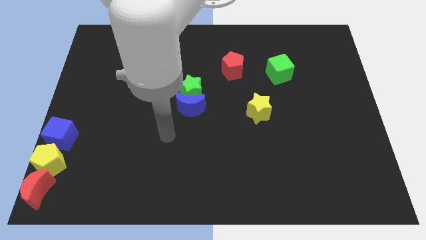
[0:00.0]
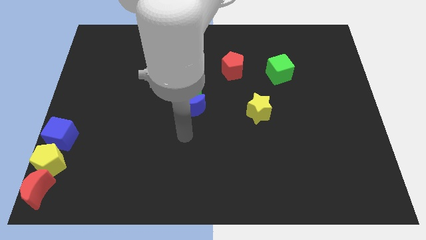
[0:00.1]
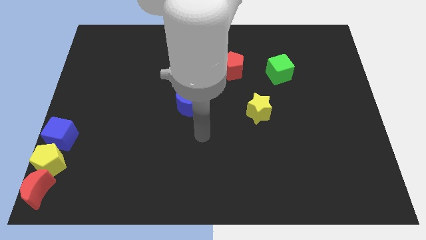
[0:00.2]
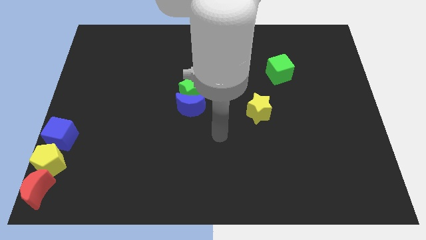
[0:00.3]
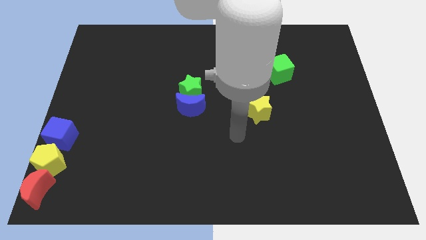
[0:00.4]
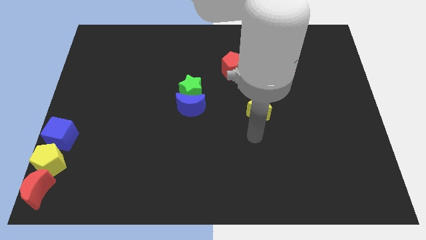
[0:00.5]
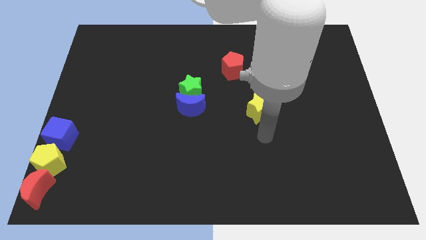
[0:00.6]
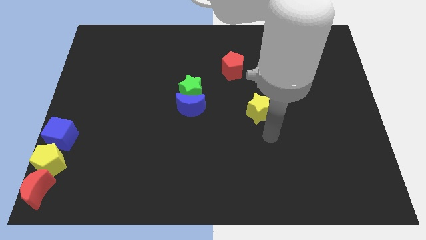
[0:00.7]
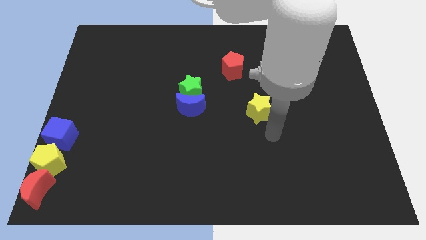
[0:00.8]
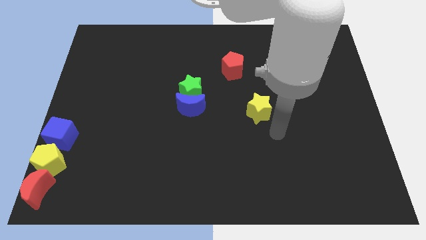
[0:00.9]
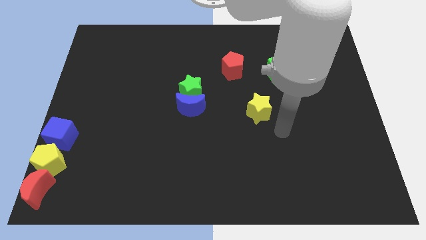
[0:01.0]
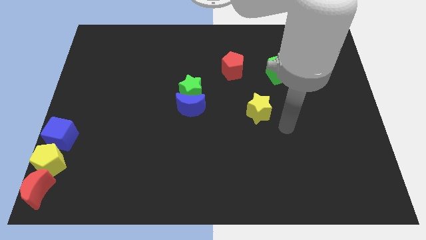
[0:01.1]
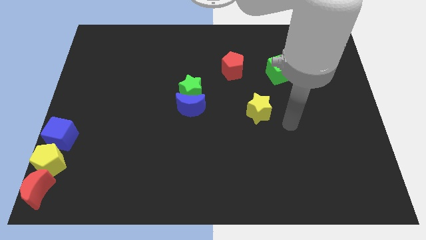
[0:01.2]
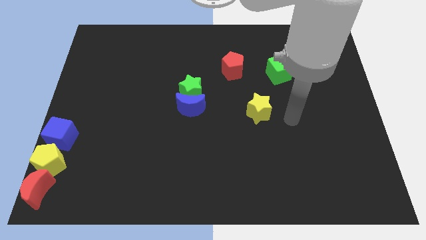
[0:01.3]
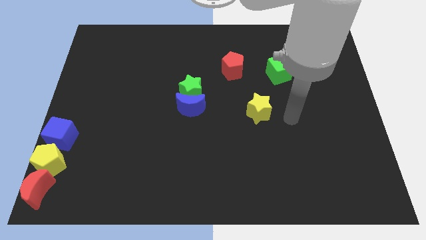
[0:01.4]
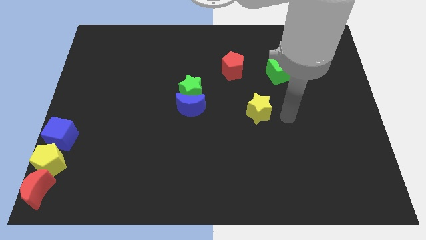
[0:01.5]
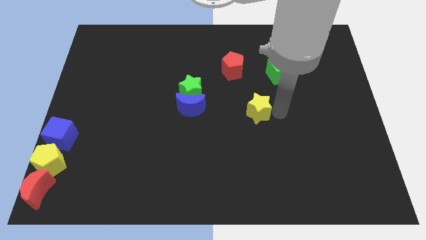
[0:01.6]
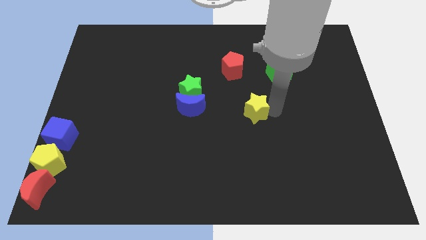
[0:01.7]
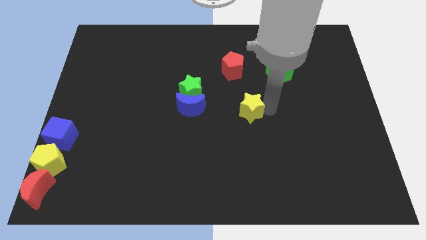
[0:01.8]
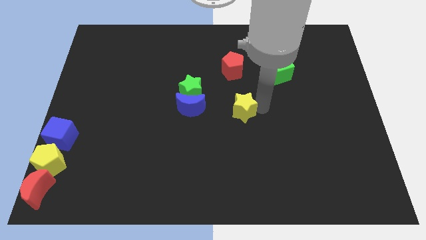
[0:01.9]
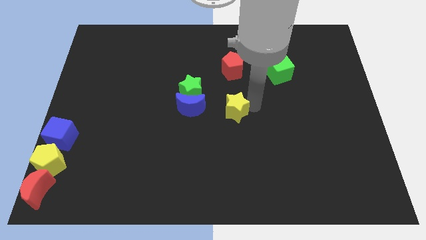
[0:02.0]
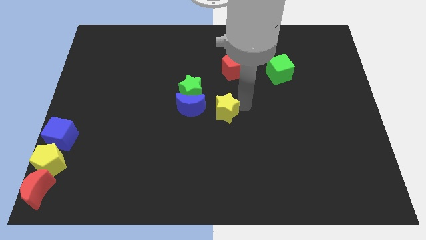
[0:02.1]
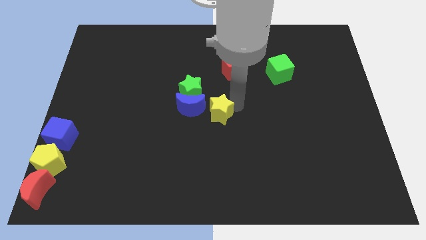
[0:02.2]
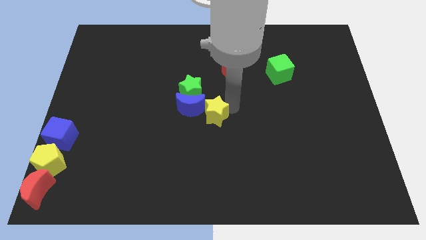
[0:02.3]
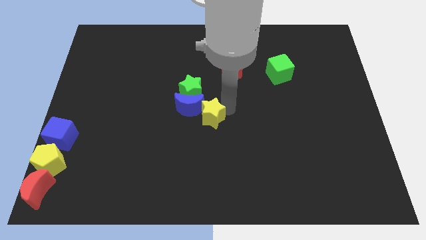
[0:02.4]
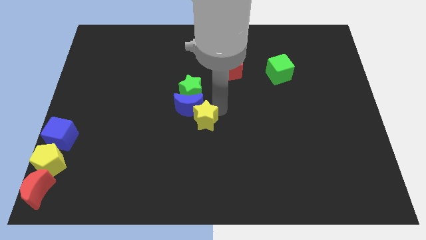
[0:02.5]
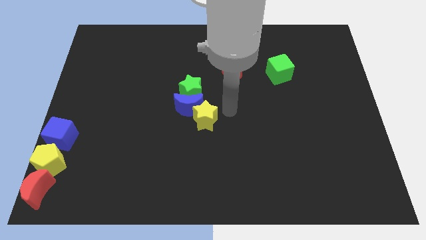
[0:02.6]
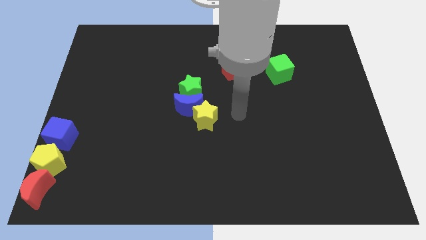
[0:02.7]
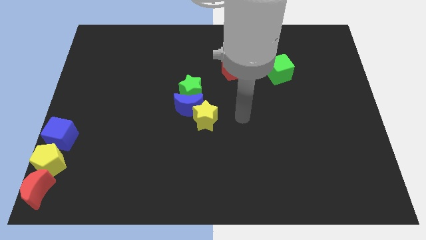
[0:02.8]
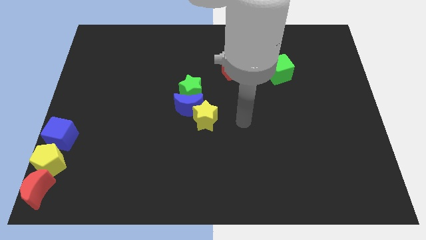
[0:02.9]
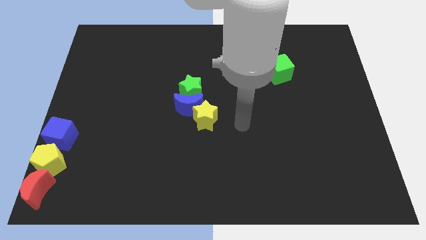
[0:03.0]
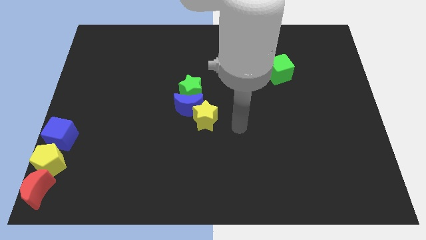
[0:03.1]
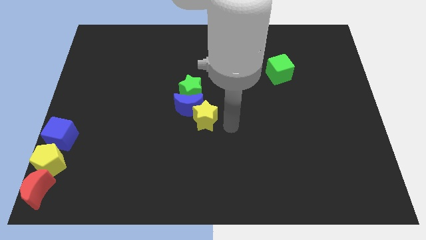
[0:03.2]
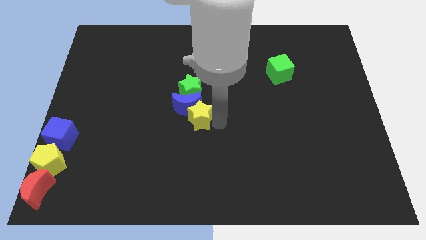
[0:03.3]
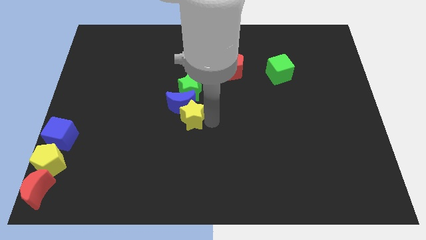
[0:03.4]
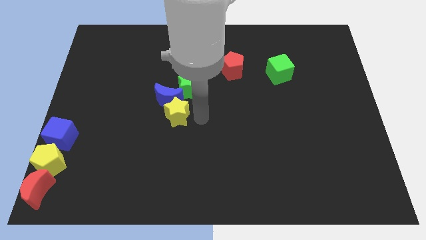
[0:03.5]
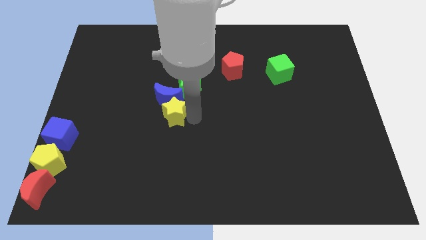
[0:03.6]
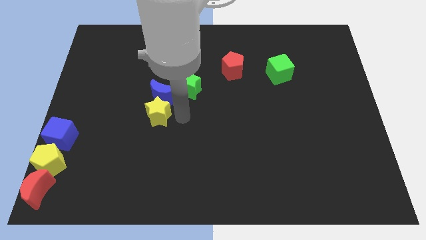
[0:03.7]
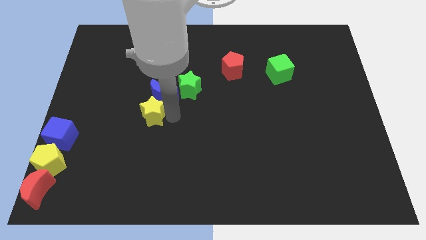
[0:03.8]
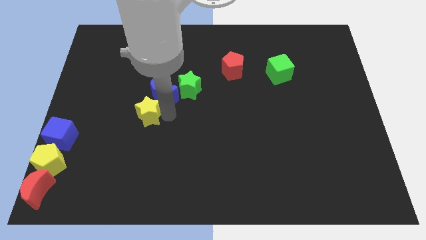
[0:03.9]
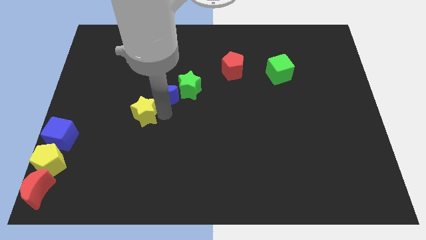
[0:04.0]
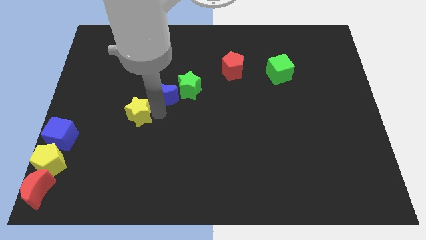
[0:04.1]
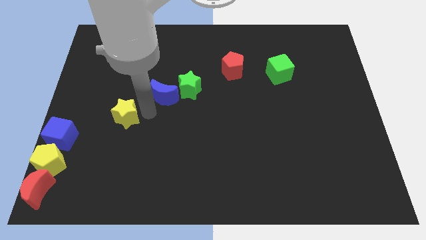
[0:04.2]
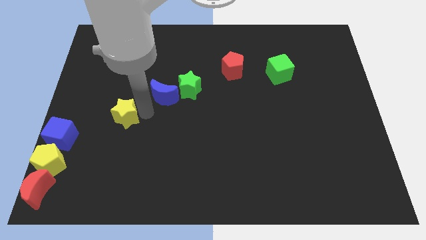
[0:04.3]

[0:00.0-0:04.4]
place the yellow star bottom left to the blue moon

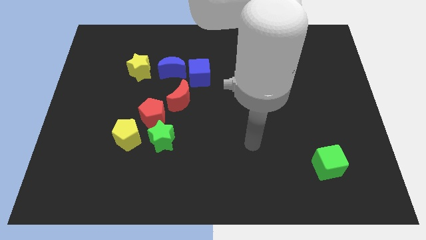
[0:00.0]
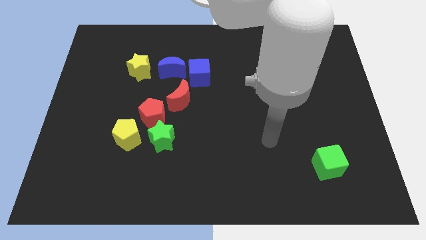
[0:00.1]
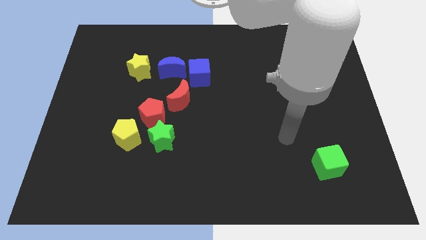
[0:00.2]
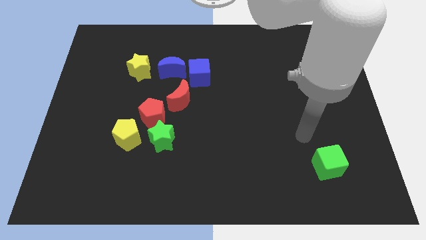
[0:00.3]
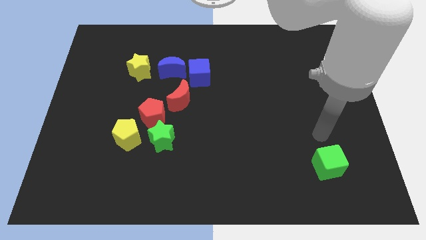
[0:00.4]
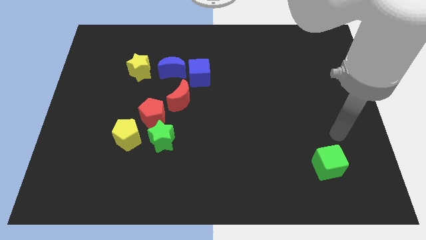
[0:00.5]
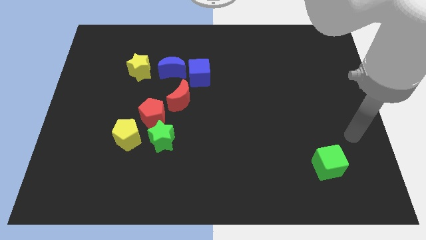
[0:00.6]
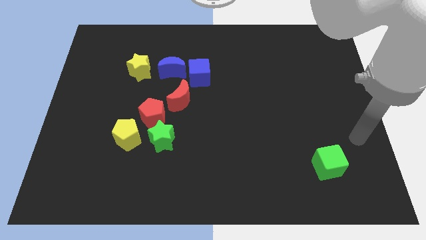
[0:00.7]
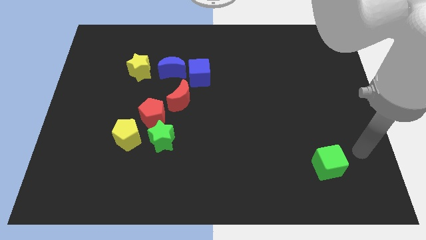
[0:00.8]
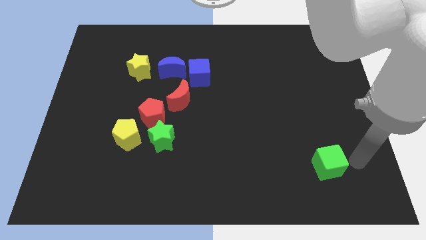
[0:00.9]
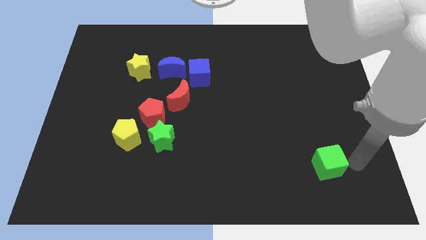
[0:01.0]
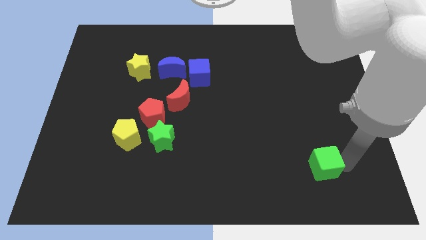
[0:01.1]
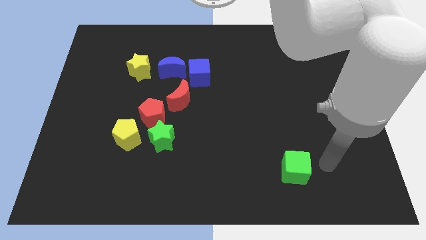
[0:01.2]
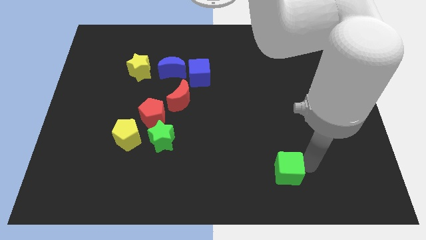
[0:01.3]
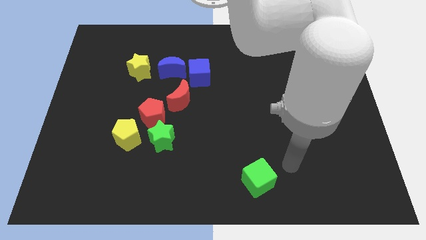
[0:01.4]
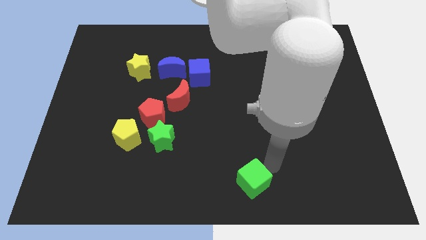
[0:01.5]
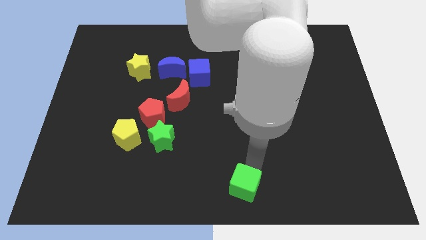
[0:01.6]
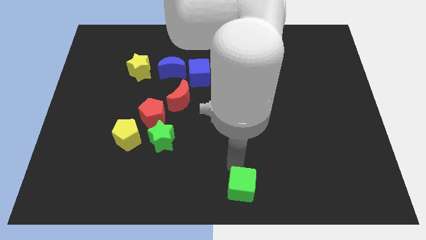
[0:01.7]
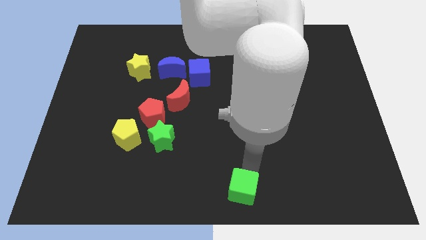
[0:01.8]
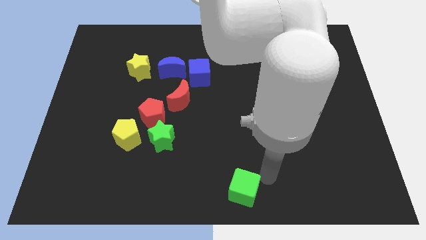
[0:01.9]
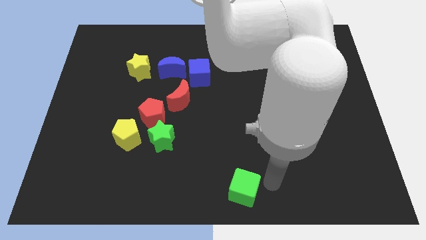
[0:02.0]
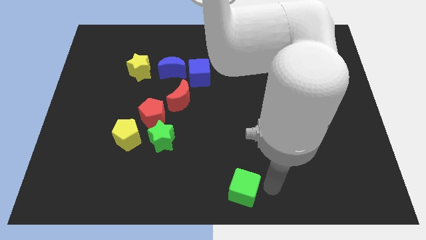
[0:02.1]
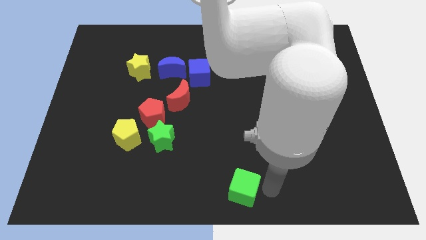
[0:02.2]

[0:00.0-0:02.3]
push green cube towards the bottom center of the board

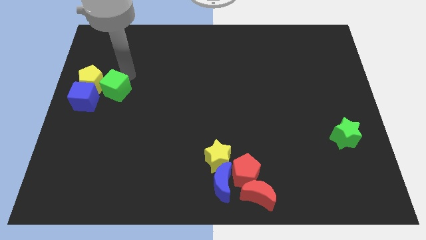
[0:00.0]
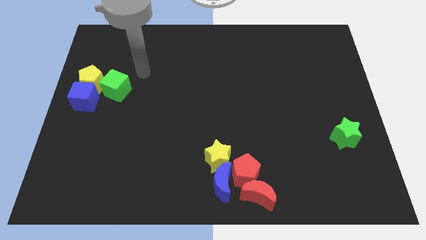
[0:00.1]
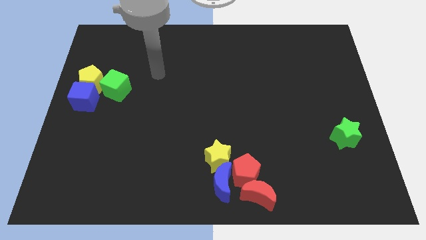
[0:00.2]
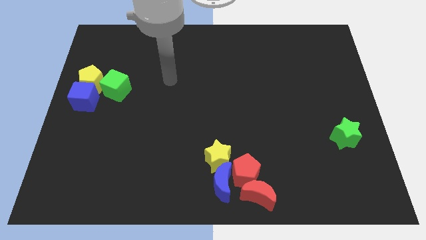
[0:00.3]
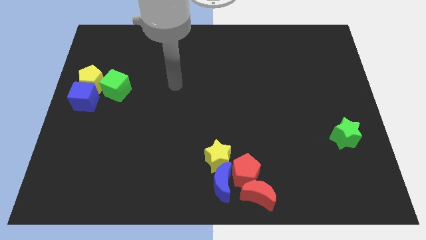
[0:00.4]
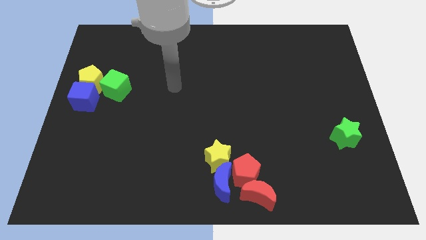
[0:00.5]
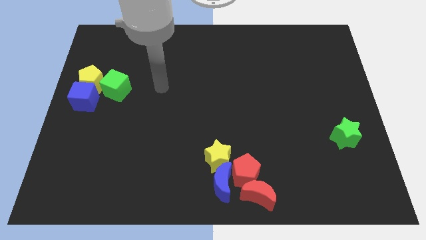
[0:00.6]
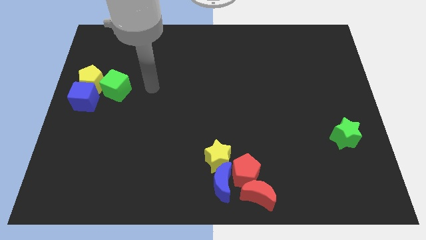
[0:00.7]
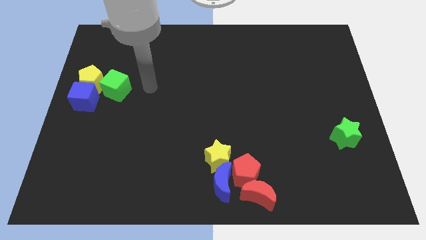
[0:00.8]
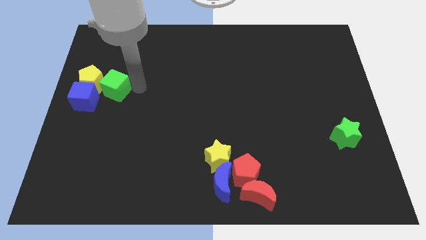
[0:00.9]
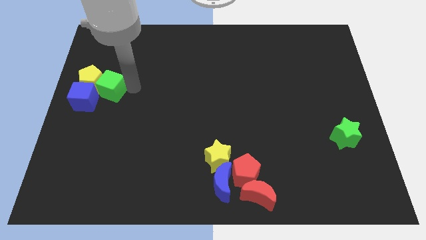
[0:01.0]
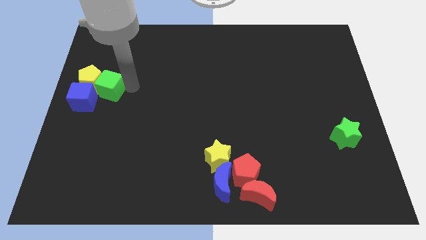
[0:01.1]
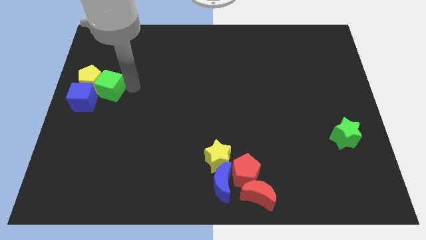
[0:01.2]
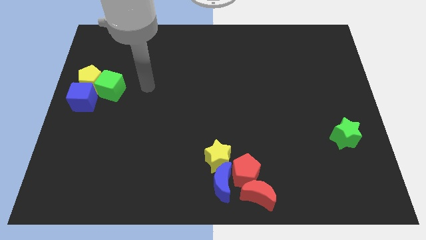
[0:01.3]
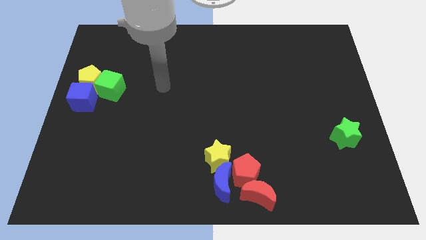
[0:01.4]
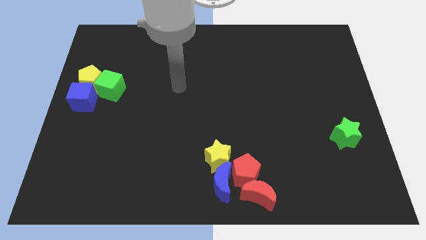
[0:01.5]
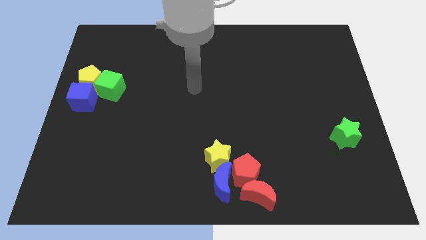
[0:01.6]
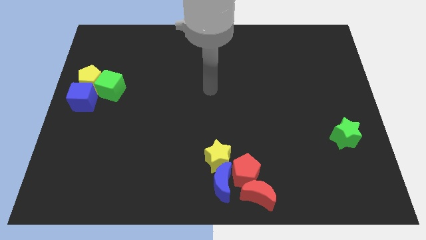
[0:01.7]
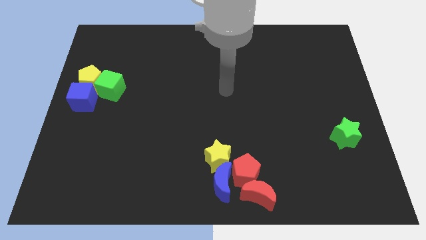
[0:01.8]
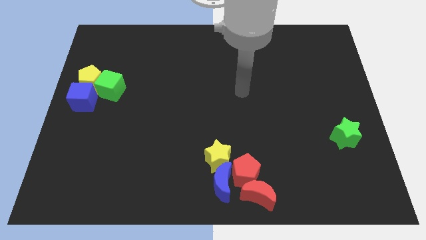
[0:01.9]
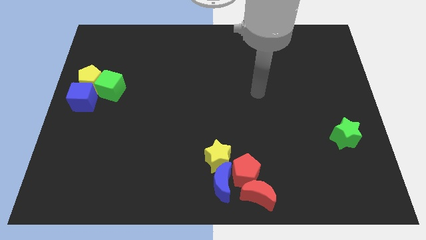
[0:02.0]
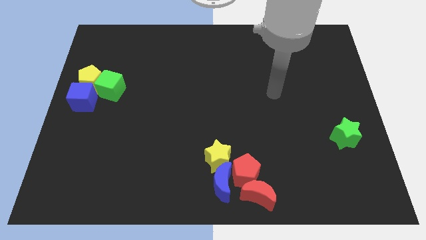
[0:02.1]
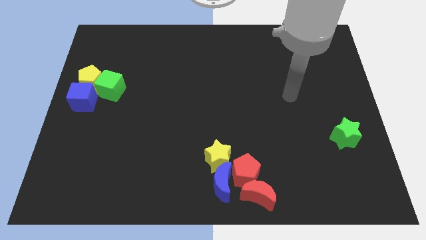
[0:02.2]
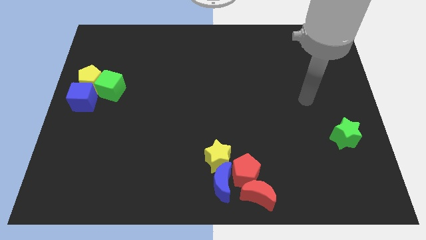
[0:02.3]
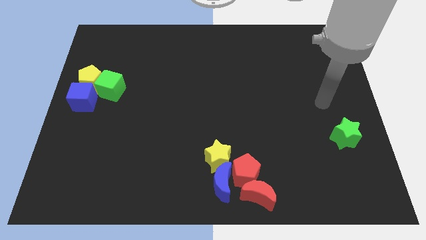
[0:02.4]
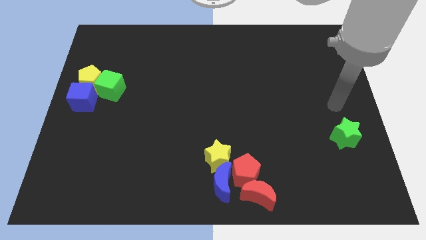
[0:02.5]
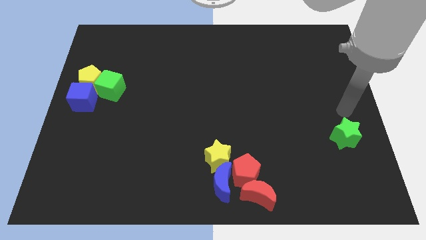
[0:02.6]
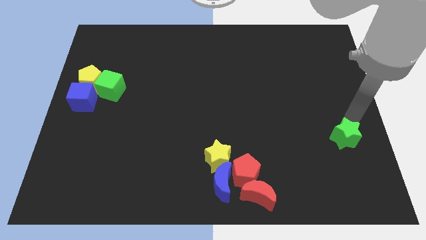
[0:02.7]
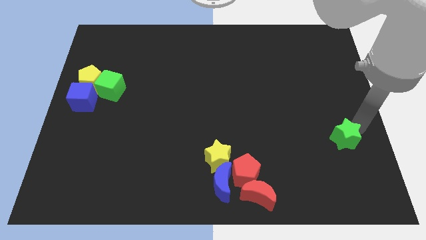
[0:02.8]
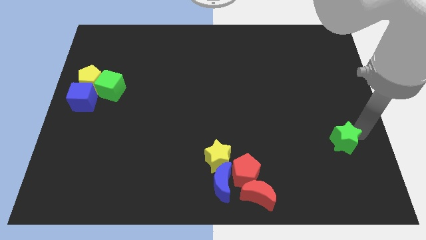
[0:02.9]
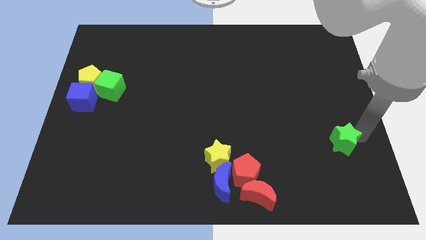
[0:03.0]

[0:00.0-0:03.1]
tap the green star
